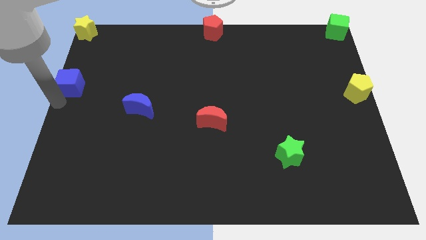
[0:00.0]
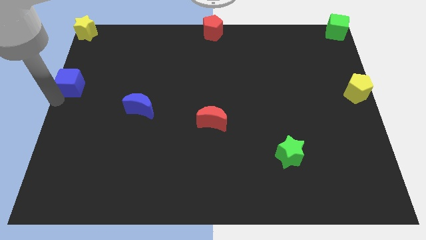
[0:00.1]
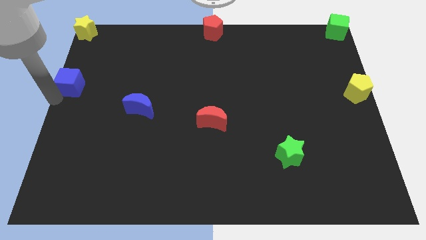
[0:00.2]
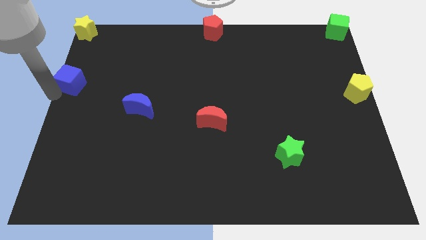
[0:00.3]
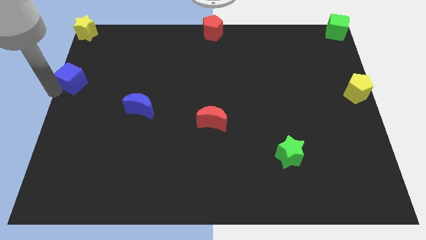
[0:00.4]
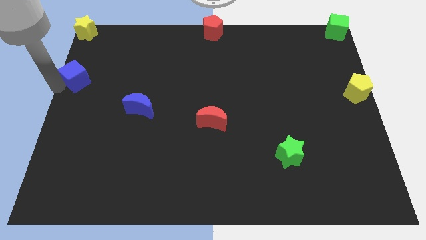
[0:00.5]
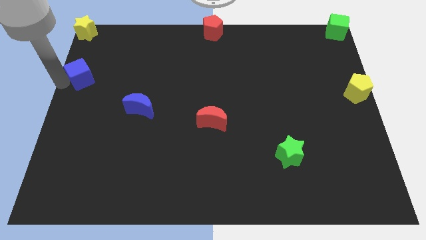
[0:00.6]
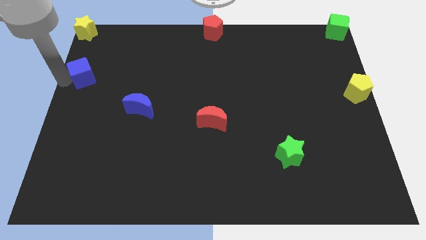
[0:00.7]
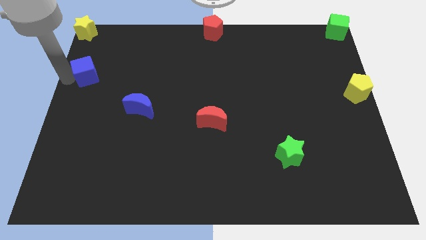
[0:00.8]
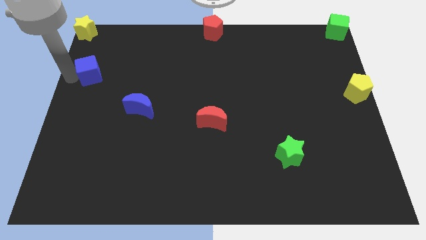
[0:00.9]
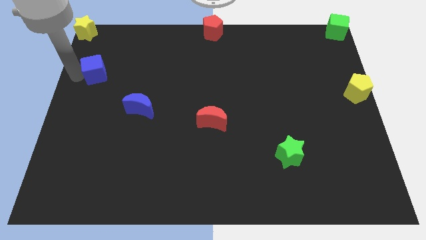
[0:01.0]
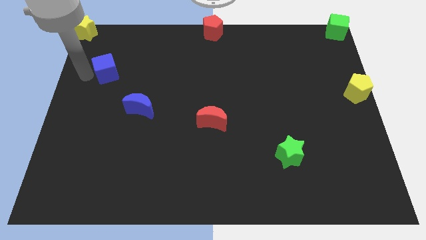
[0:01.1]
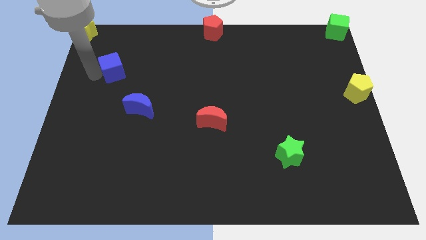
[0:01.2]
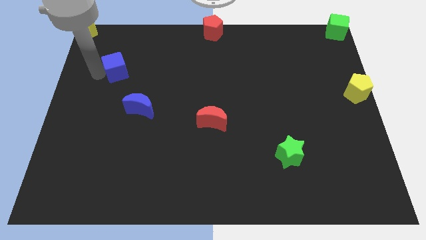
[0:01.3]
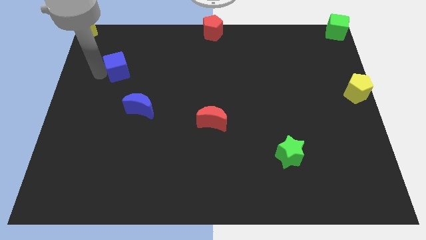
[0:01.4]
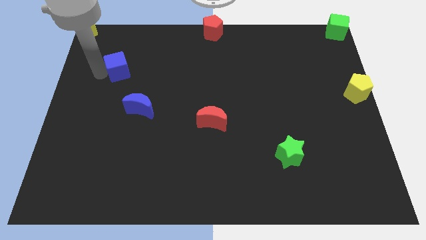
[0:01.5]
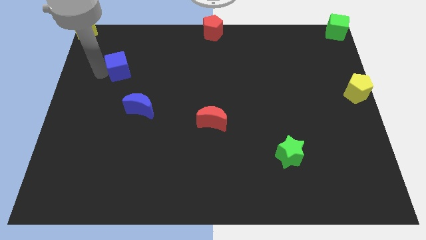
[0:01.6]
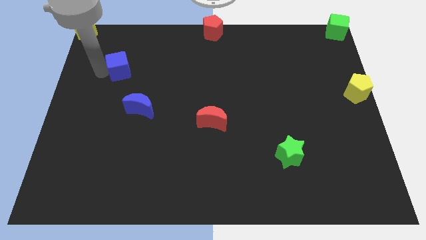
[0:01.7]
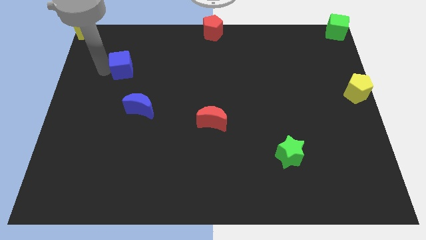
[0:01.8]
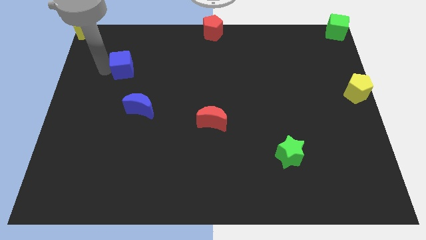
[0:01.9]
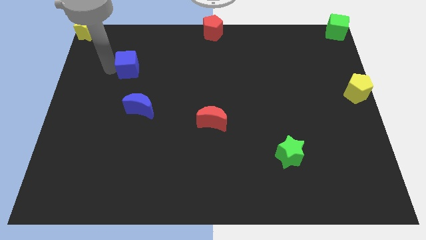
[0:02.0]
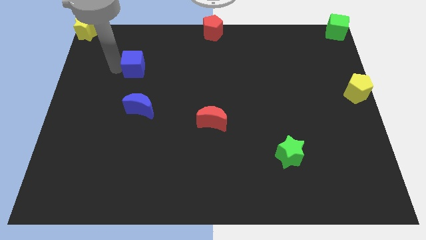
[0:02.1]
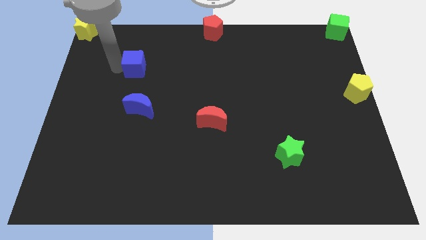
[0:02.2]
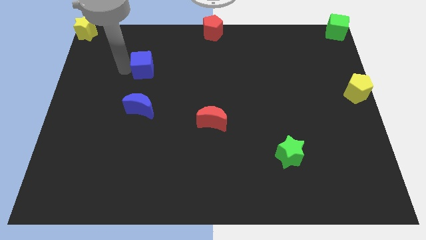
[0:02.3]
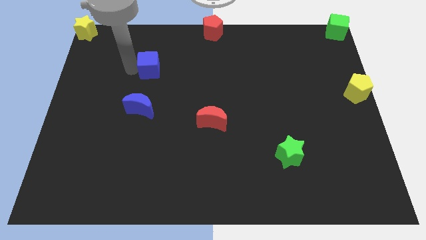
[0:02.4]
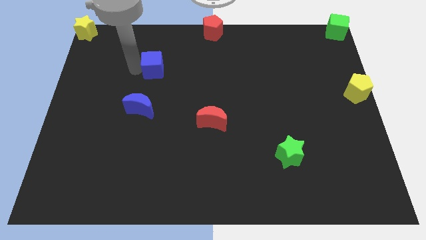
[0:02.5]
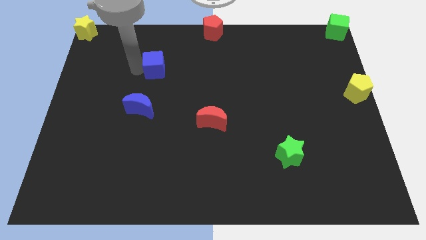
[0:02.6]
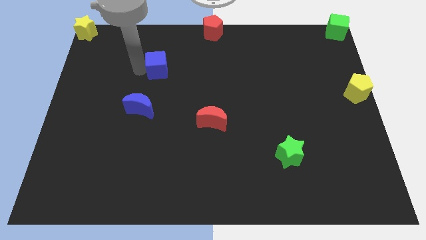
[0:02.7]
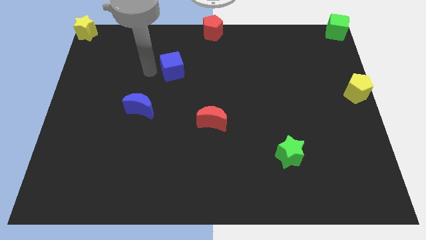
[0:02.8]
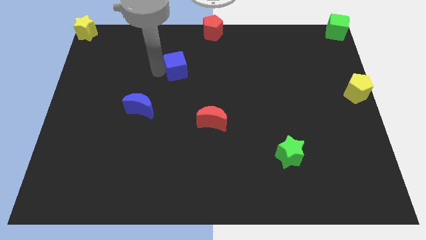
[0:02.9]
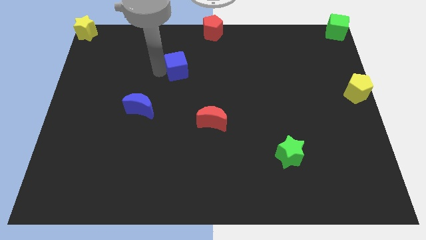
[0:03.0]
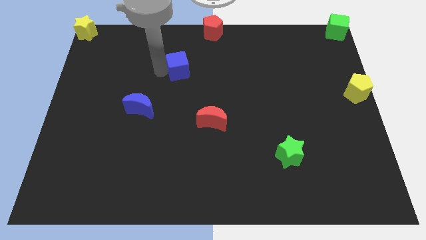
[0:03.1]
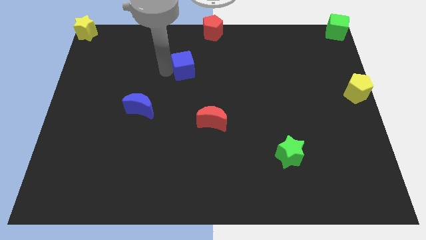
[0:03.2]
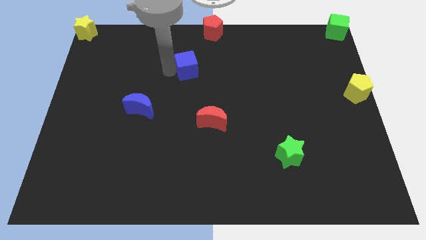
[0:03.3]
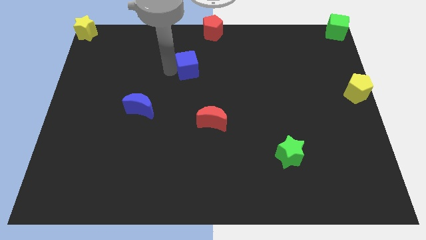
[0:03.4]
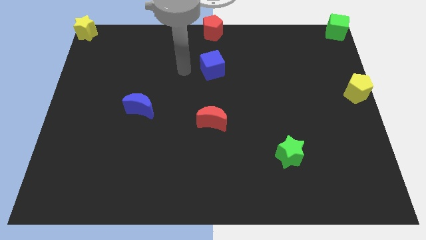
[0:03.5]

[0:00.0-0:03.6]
move the blue cube in between the red pentagon and red crescent

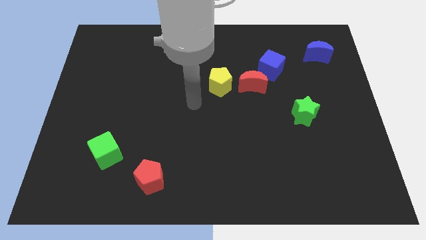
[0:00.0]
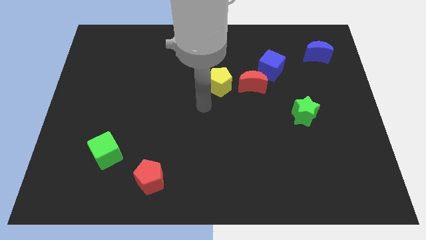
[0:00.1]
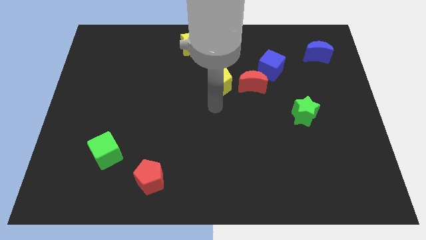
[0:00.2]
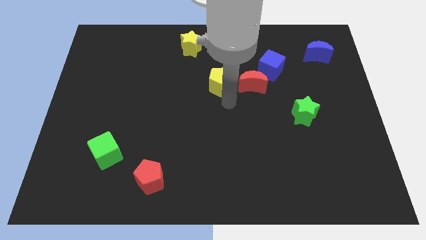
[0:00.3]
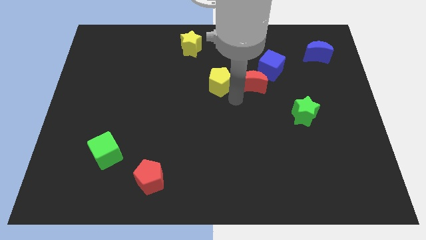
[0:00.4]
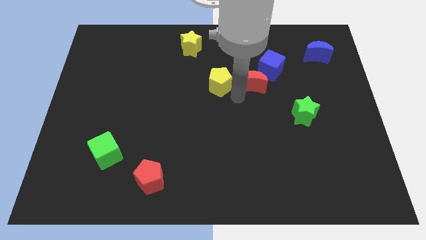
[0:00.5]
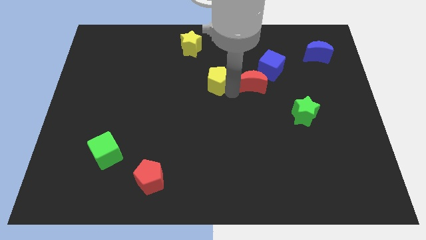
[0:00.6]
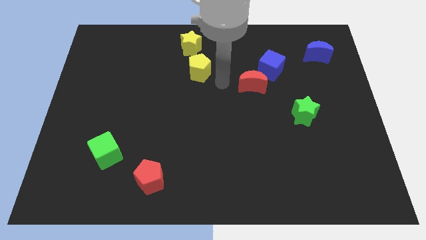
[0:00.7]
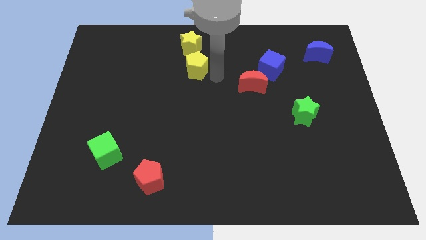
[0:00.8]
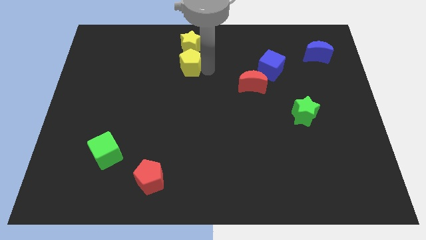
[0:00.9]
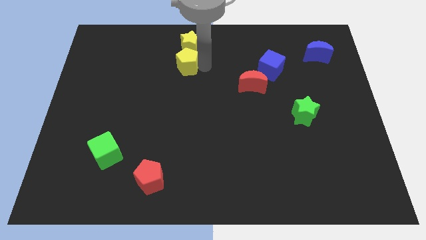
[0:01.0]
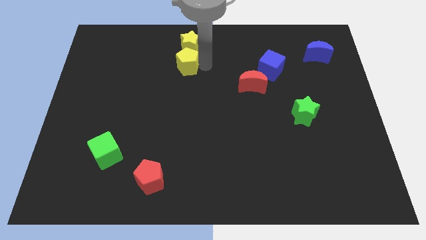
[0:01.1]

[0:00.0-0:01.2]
move the yellow pentagon to the bottom side of the yellow star

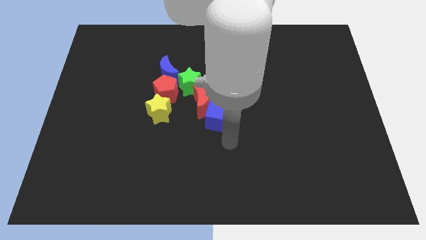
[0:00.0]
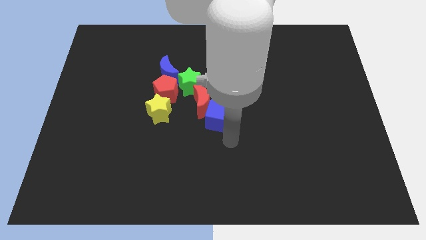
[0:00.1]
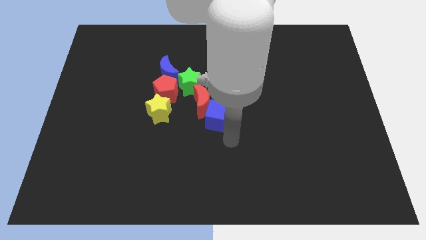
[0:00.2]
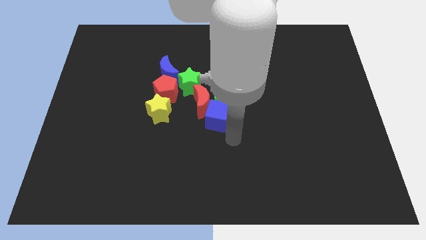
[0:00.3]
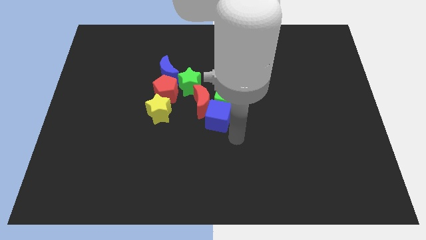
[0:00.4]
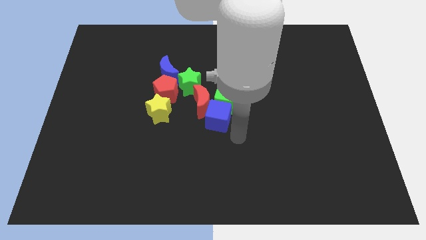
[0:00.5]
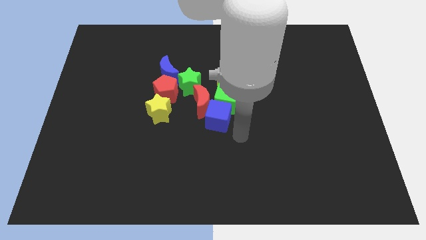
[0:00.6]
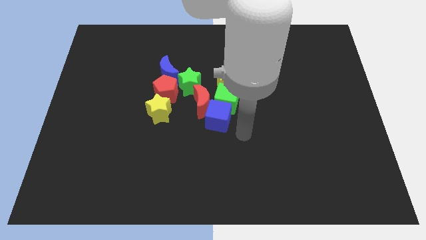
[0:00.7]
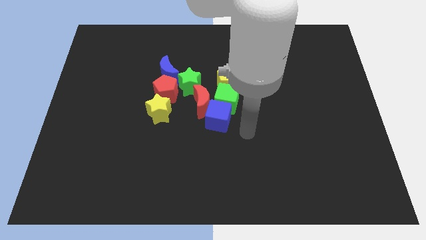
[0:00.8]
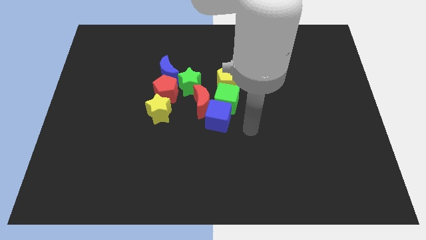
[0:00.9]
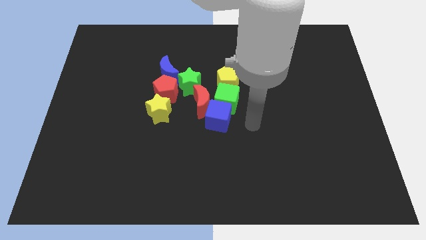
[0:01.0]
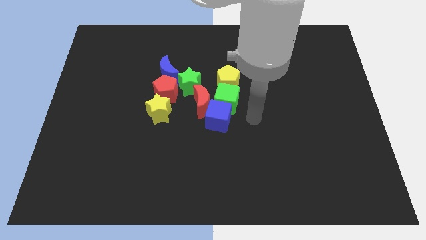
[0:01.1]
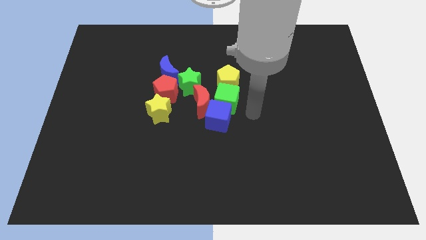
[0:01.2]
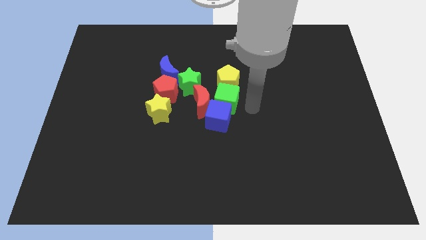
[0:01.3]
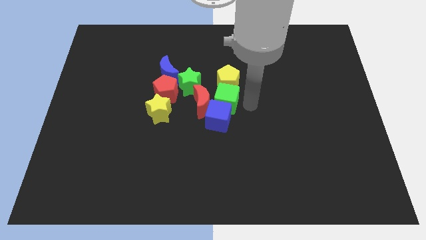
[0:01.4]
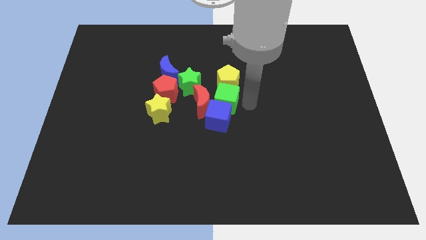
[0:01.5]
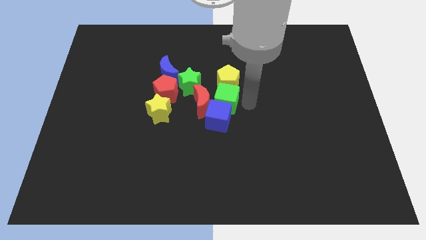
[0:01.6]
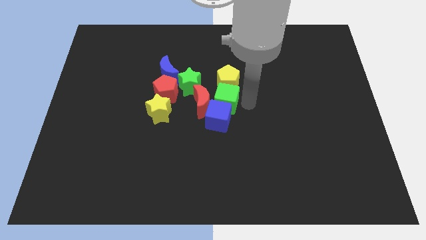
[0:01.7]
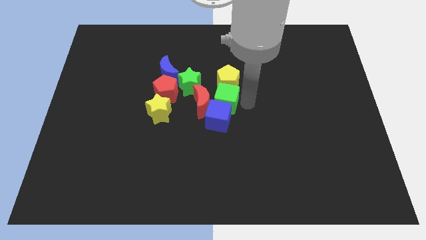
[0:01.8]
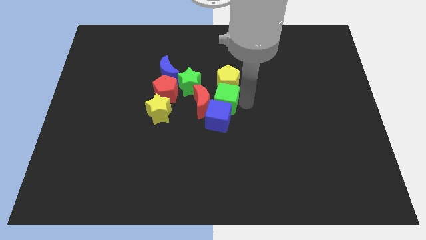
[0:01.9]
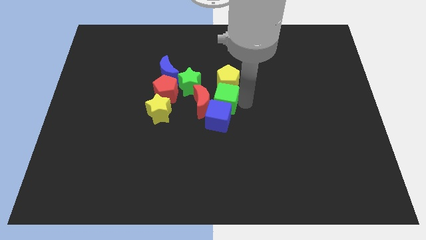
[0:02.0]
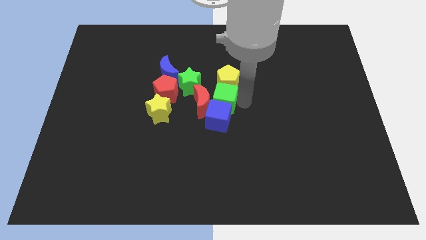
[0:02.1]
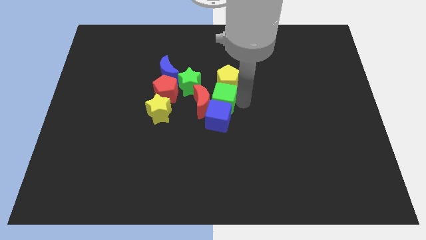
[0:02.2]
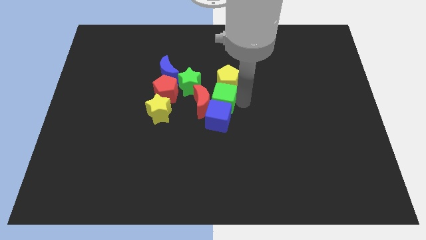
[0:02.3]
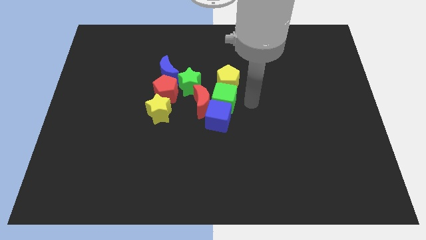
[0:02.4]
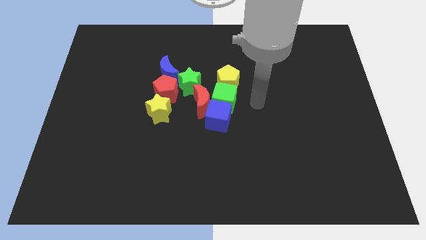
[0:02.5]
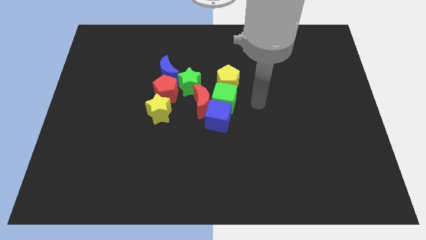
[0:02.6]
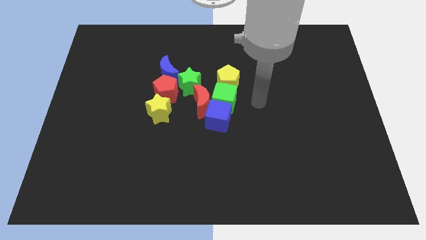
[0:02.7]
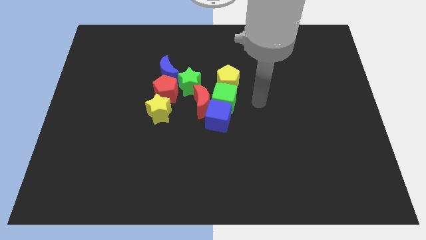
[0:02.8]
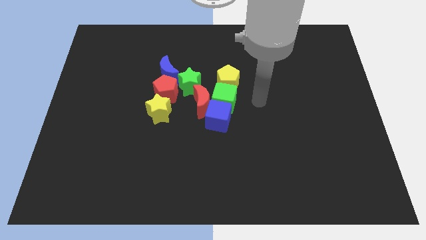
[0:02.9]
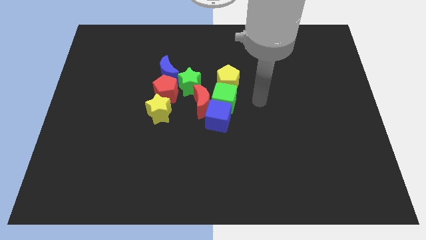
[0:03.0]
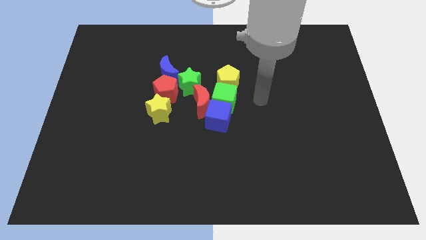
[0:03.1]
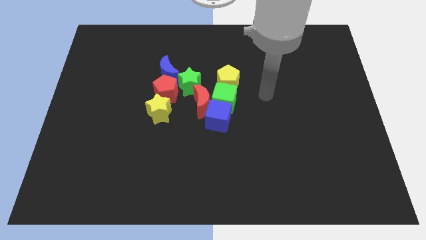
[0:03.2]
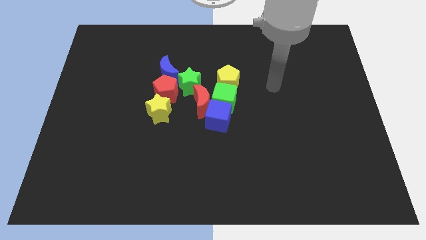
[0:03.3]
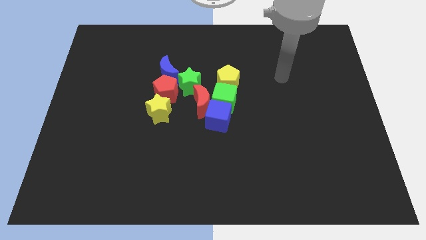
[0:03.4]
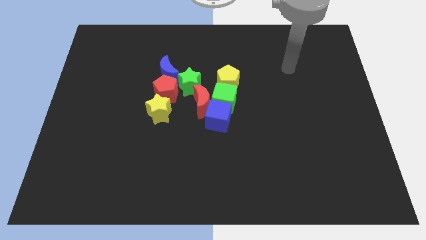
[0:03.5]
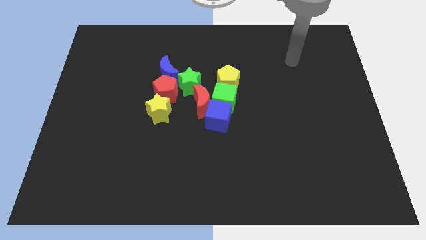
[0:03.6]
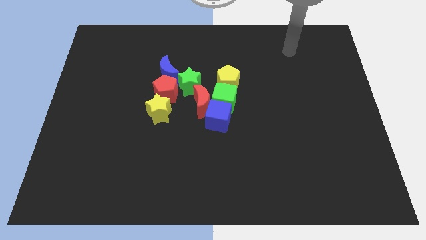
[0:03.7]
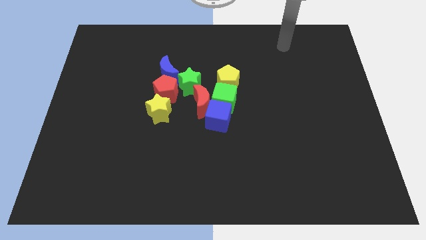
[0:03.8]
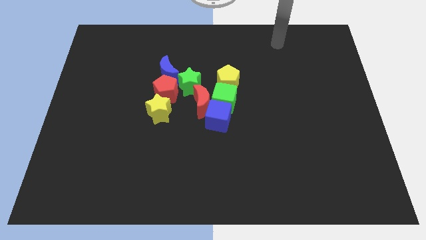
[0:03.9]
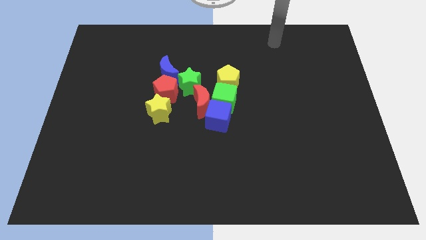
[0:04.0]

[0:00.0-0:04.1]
put your arm on the top right of the board
